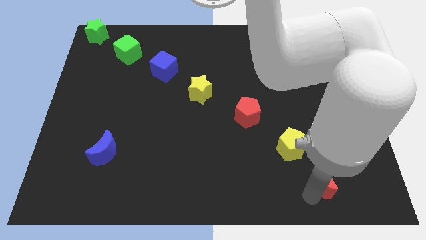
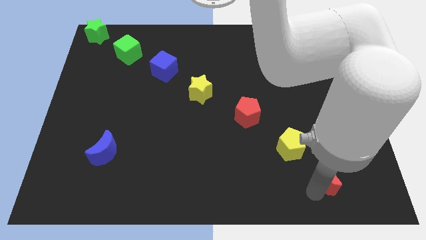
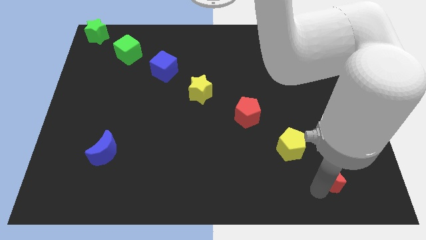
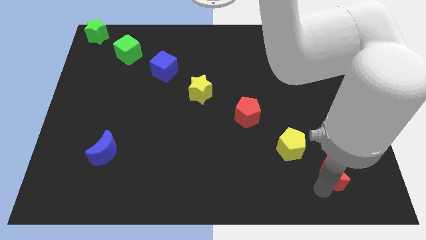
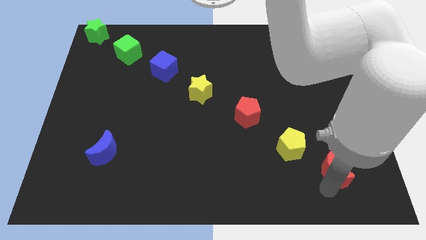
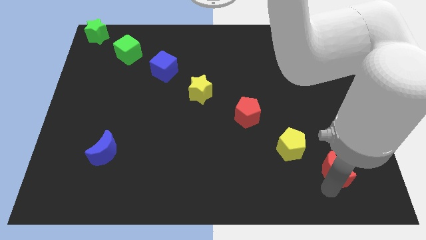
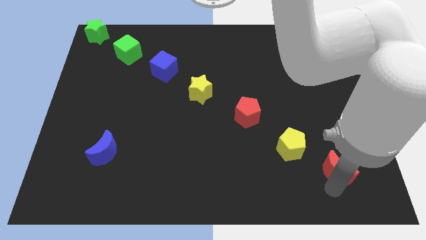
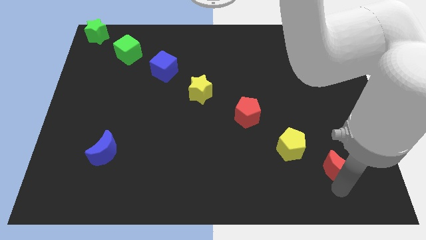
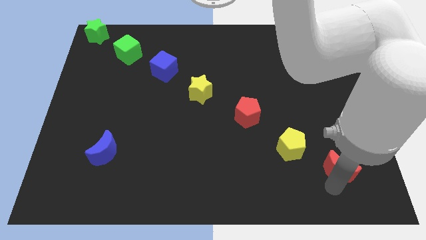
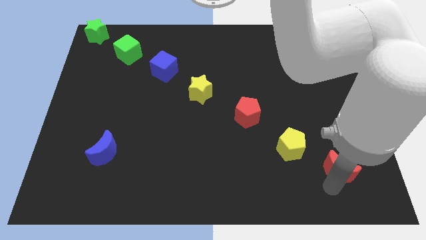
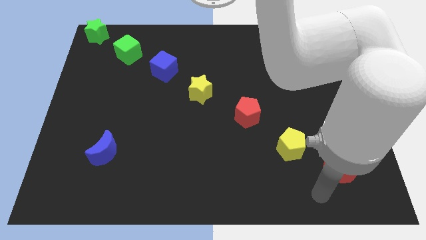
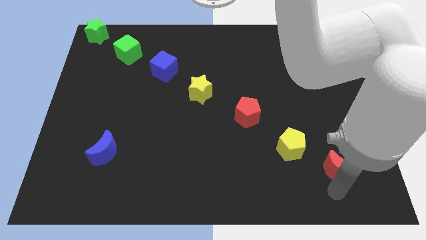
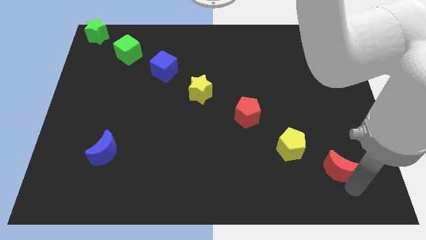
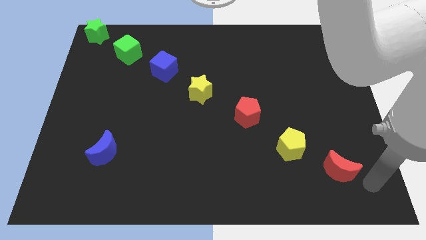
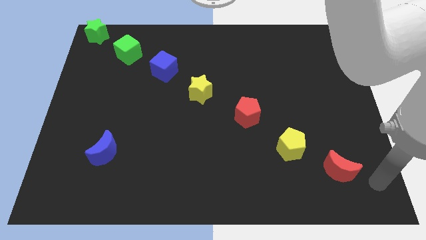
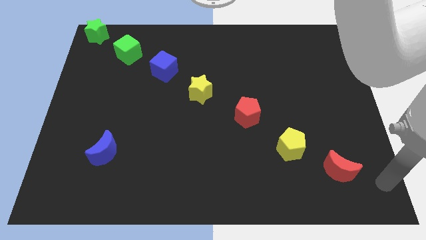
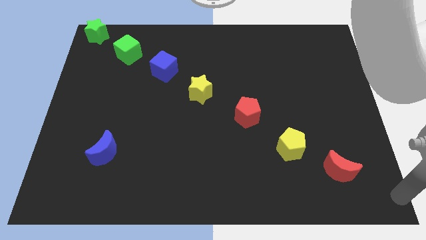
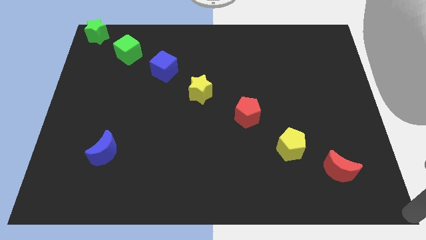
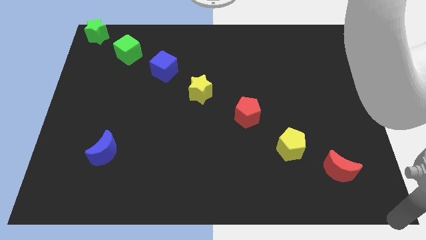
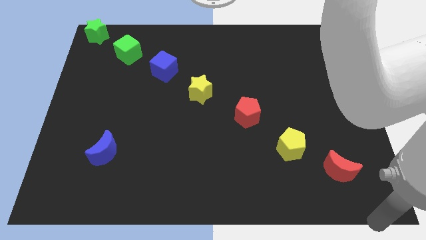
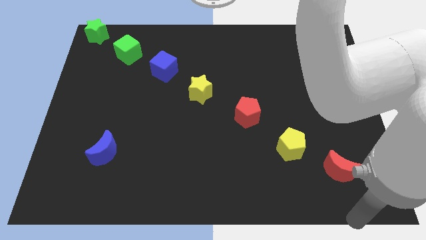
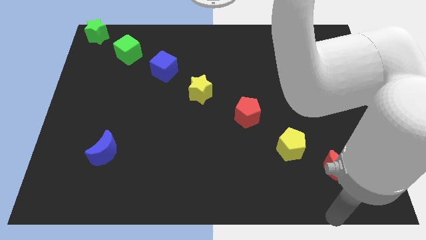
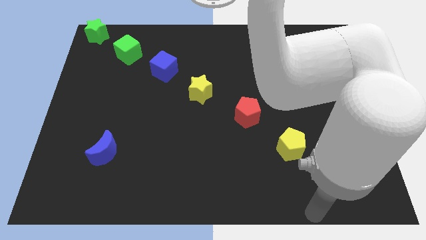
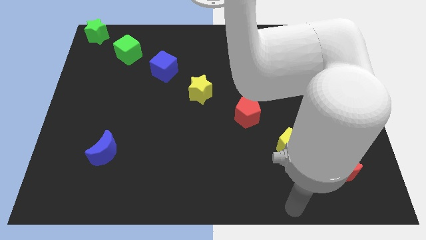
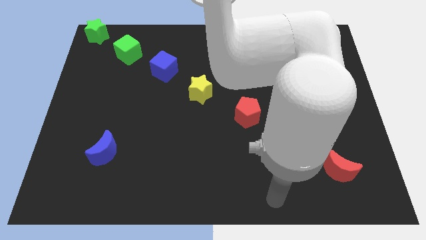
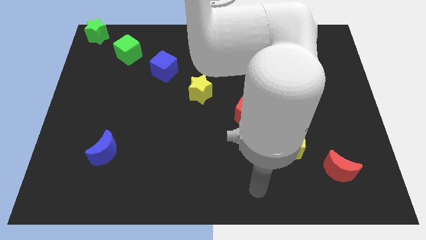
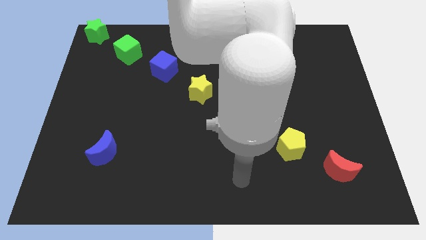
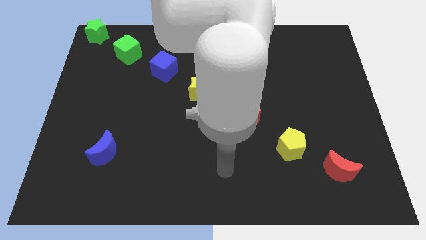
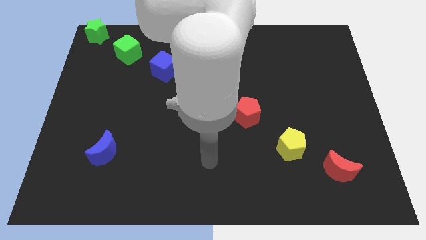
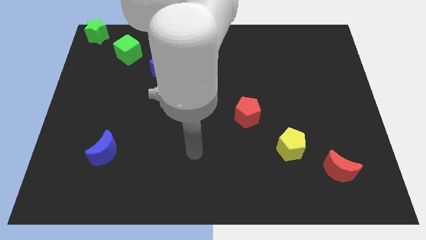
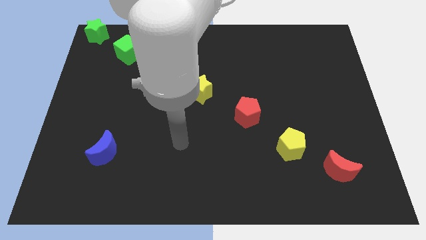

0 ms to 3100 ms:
move the red crescent diagonally right to the yellow pentagon

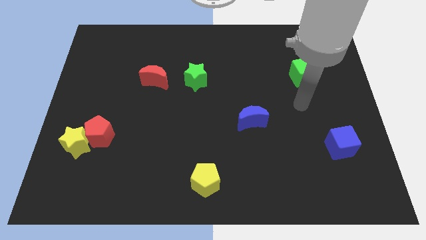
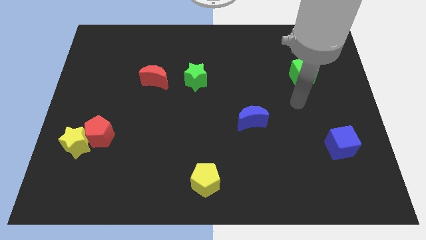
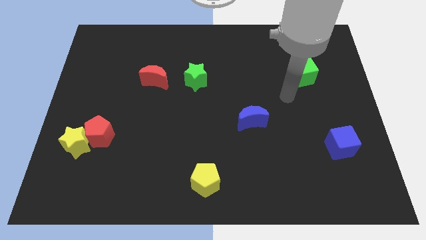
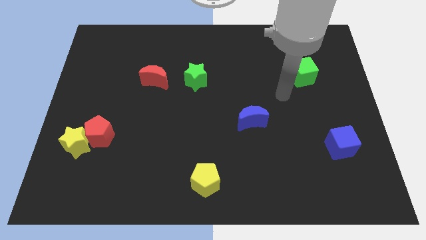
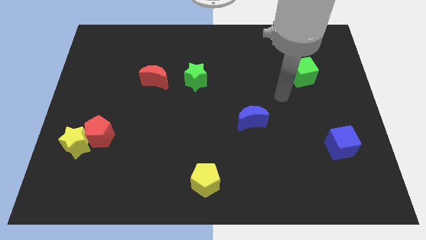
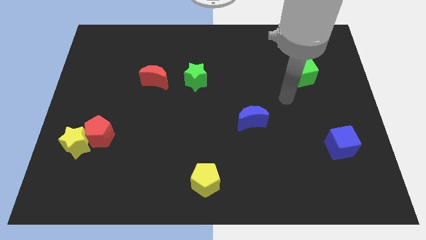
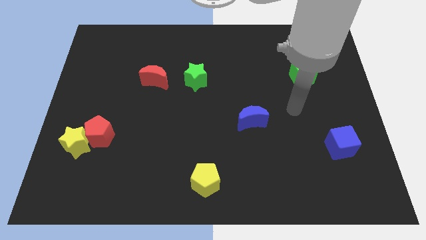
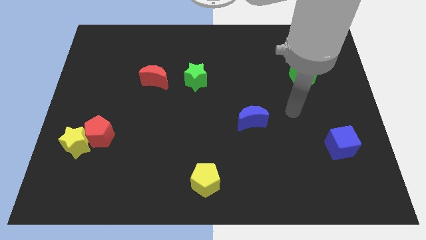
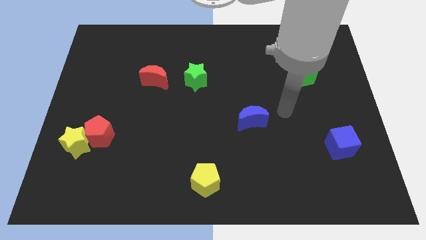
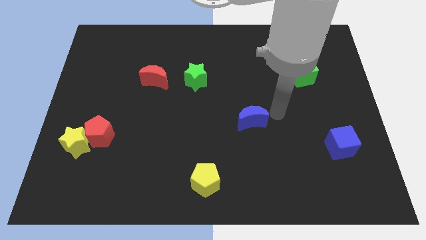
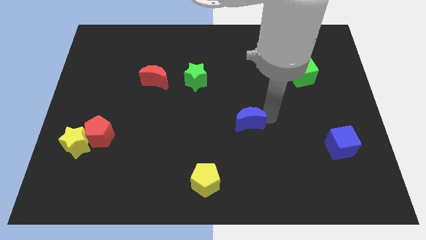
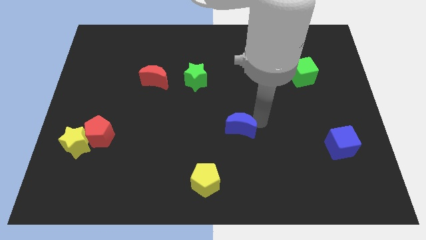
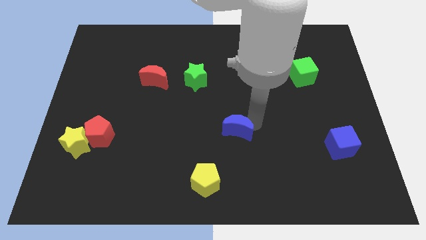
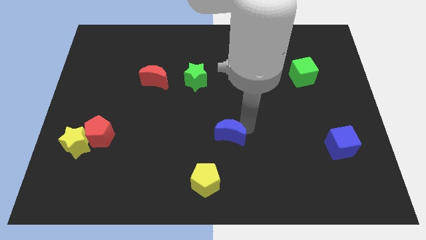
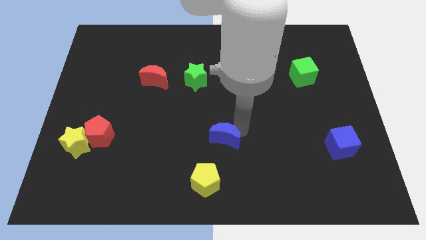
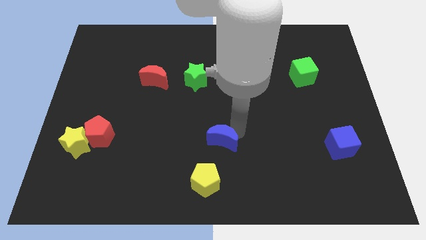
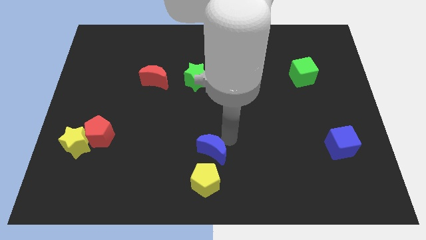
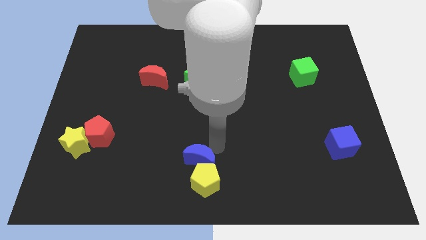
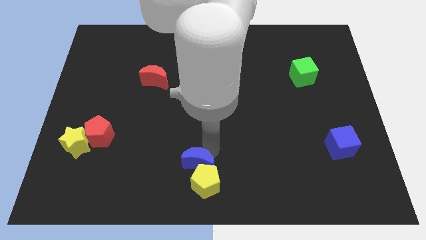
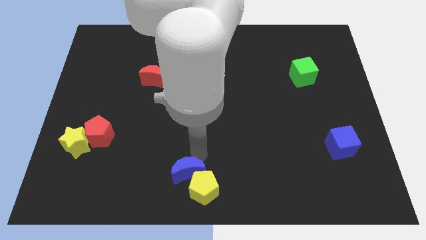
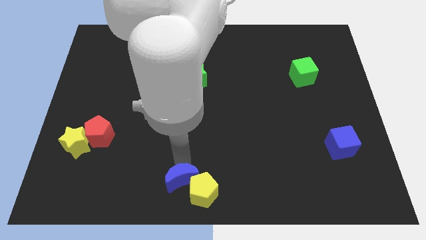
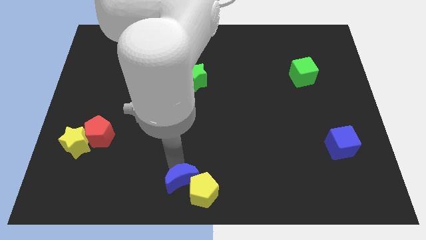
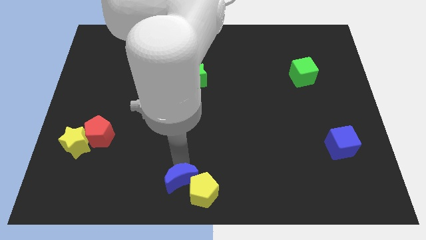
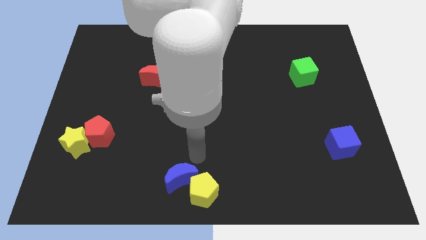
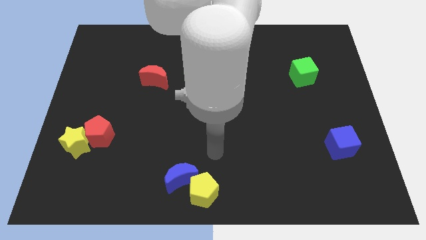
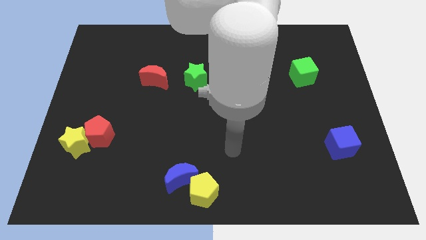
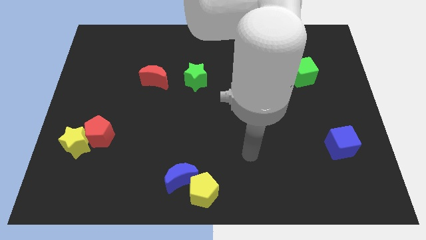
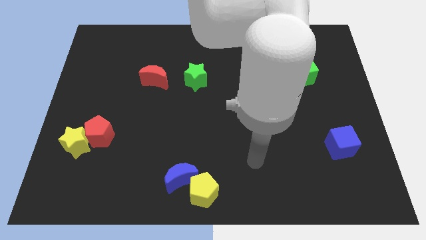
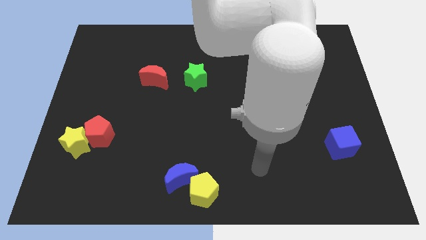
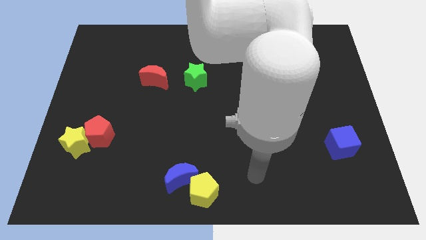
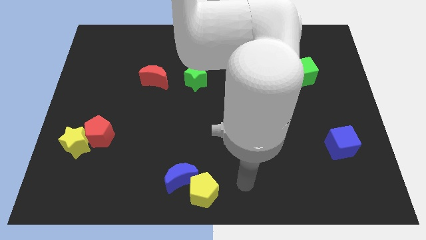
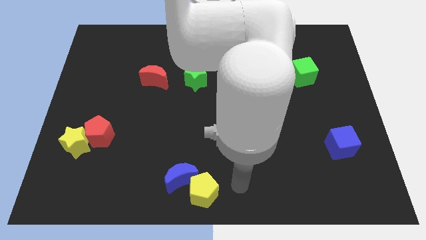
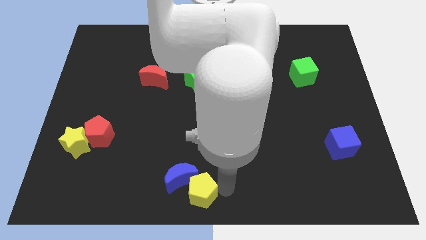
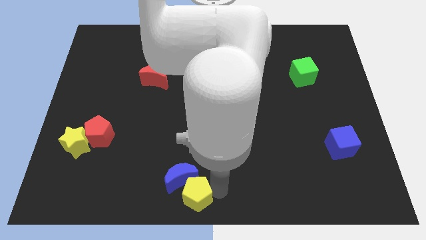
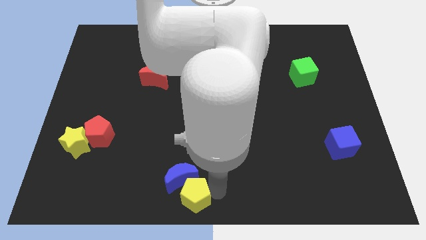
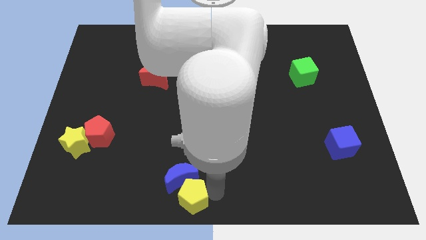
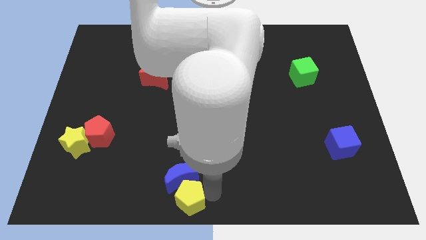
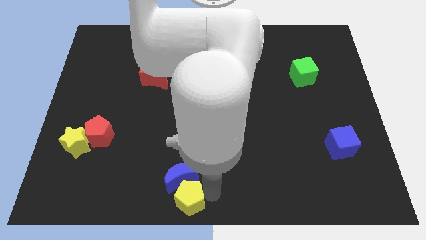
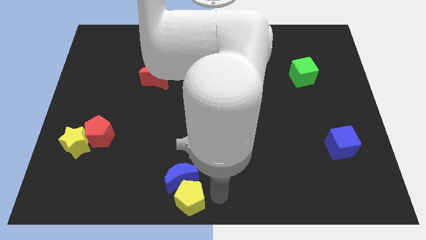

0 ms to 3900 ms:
push the blue crescent and the yellow pentagon to the bottom center of the board

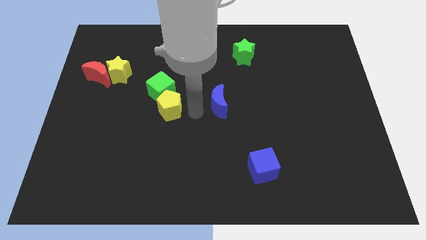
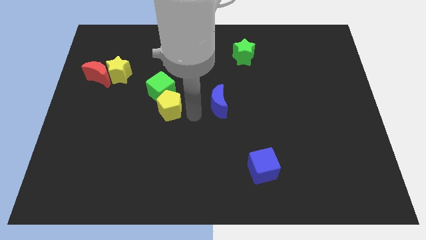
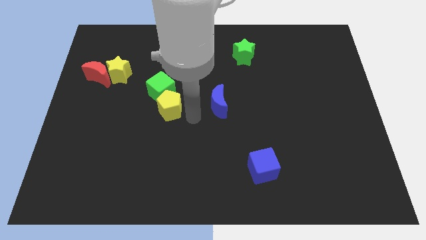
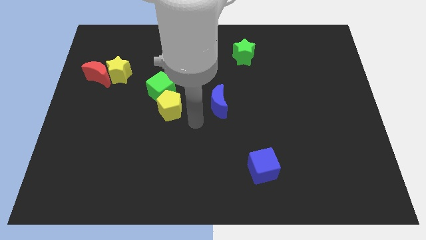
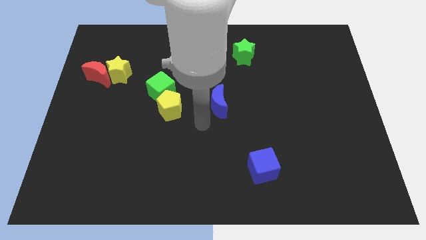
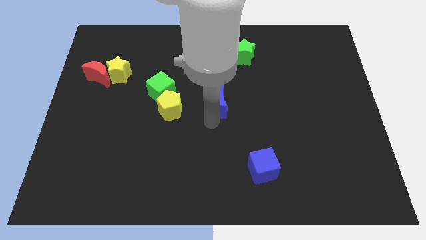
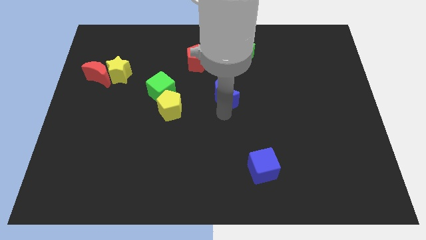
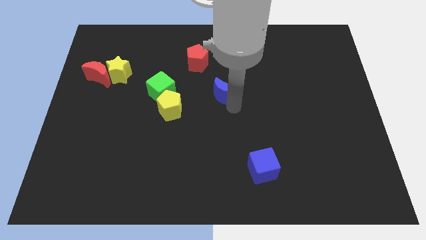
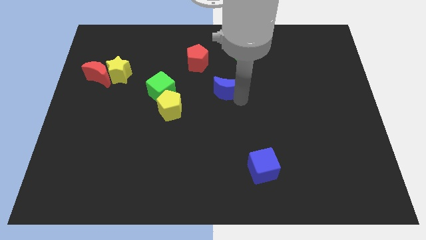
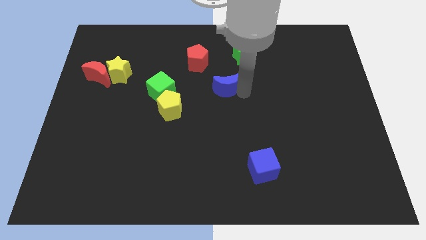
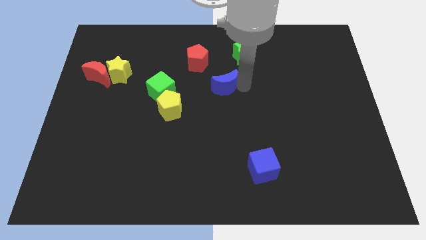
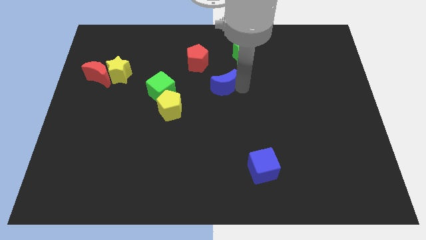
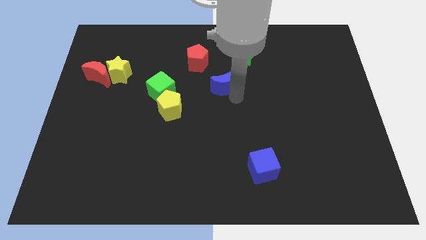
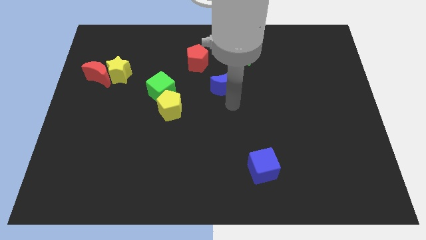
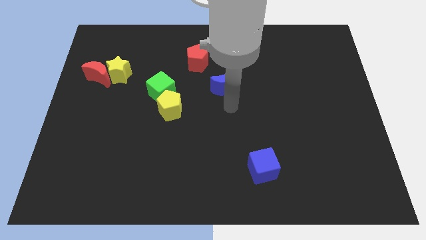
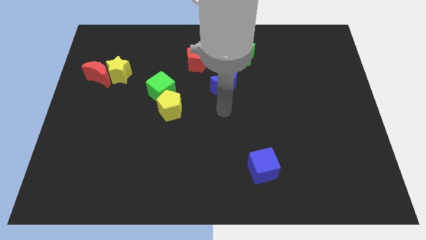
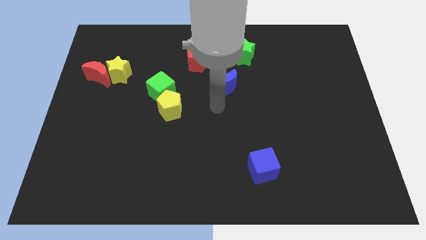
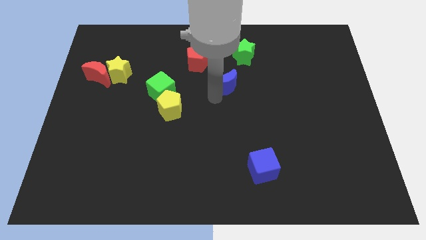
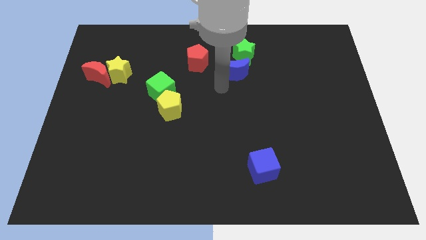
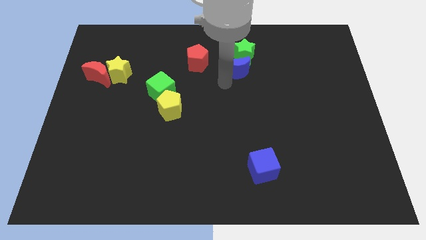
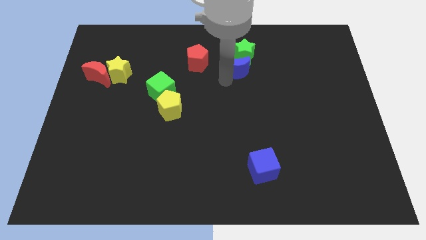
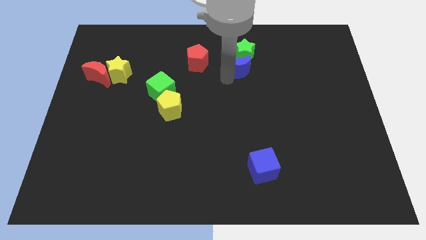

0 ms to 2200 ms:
place the blue moon below the green star
